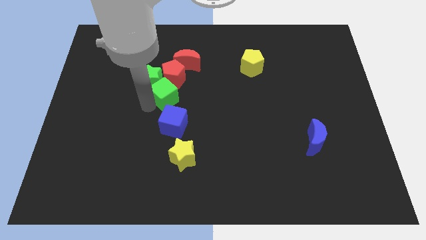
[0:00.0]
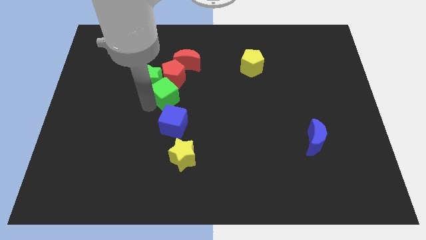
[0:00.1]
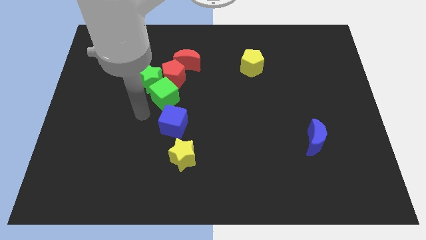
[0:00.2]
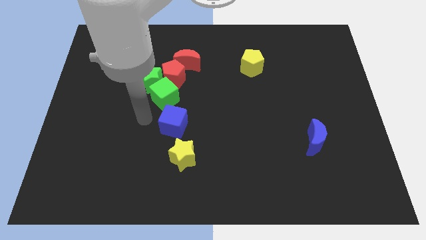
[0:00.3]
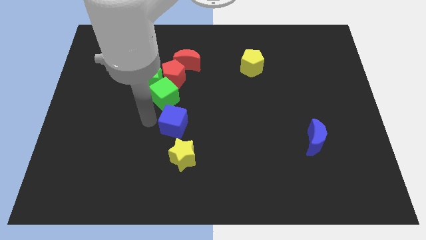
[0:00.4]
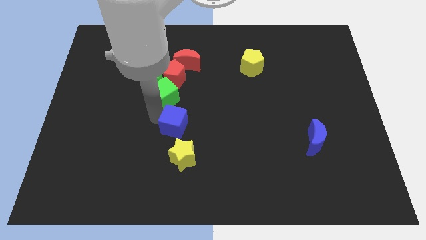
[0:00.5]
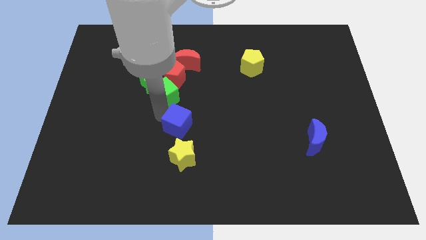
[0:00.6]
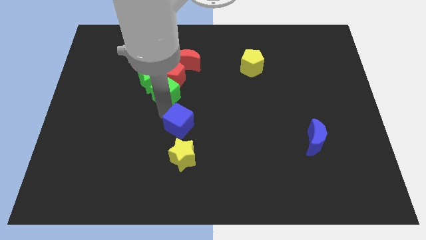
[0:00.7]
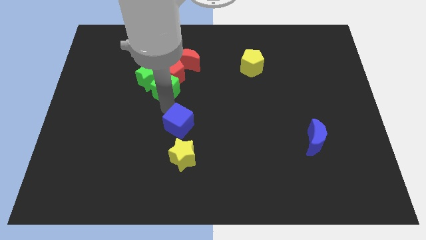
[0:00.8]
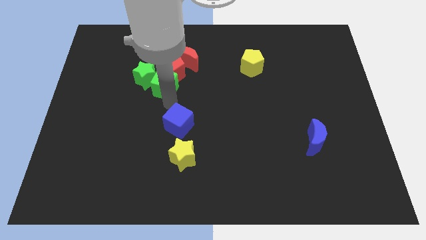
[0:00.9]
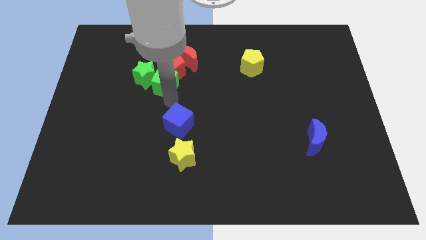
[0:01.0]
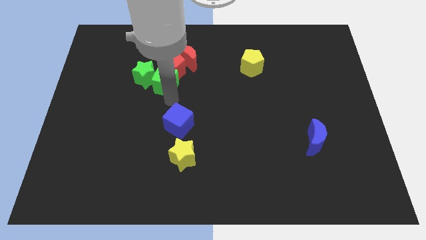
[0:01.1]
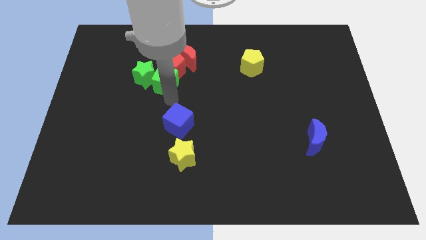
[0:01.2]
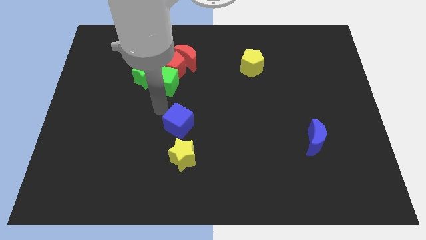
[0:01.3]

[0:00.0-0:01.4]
move the green cube into the red oentagon

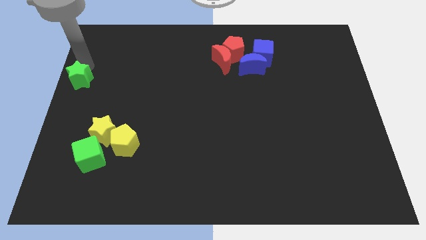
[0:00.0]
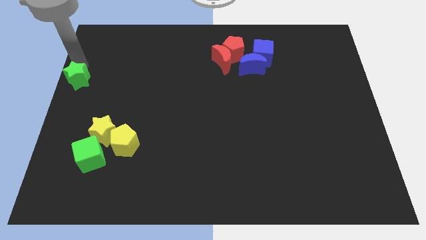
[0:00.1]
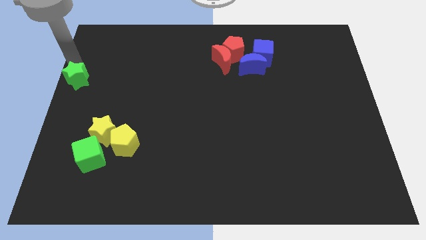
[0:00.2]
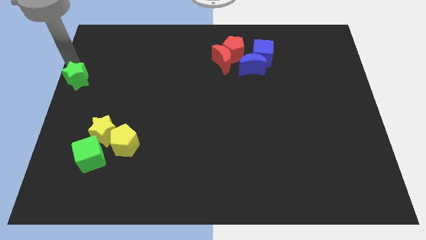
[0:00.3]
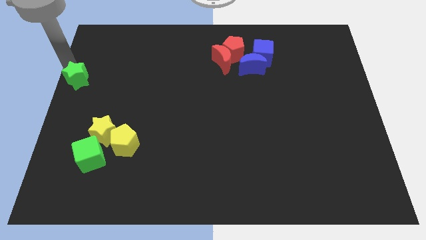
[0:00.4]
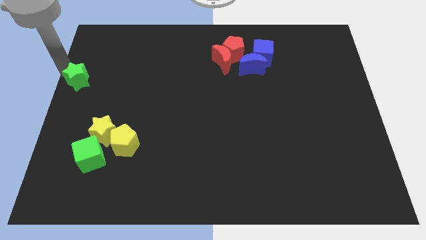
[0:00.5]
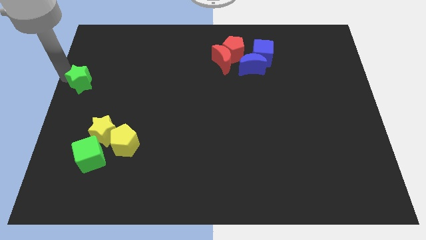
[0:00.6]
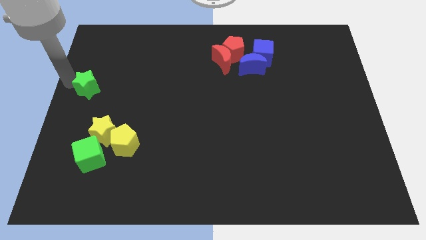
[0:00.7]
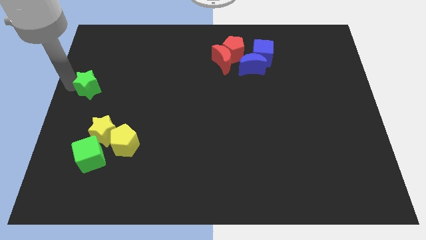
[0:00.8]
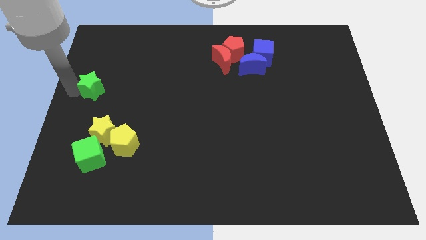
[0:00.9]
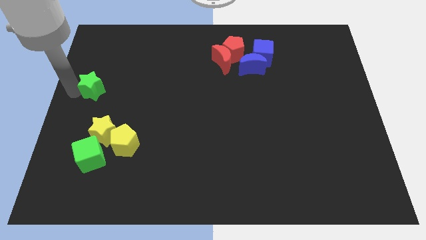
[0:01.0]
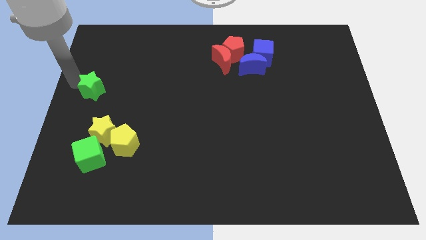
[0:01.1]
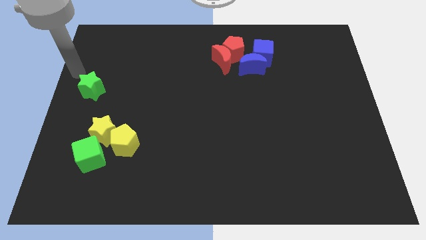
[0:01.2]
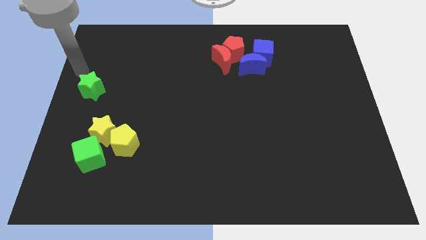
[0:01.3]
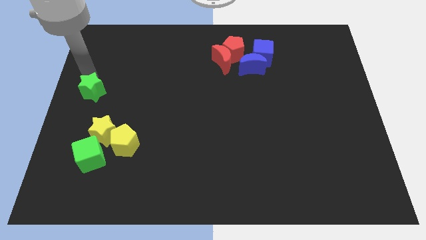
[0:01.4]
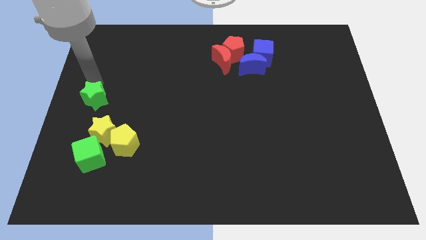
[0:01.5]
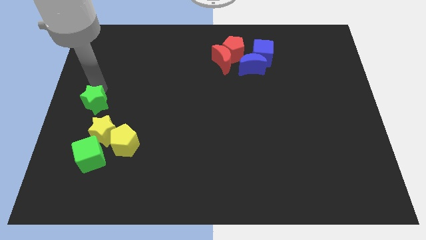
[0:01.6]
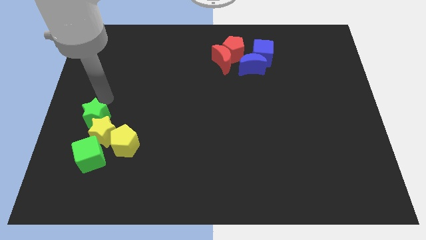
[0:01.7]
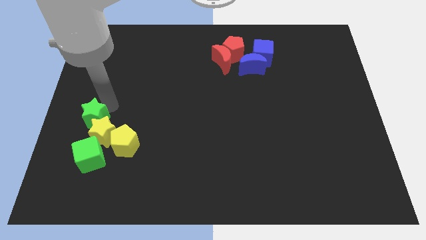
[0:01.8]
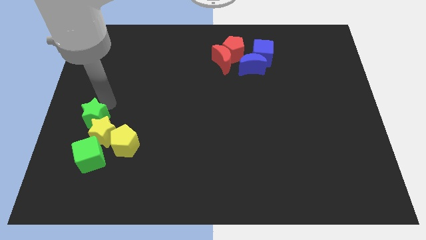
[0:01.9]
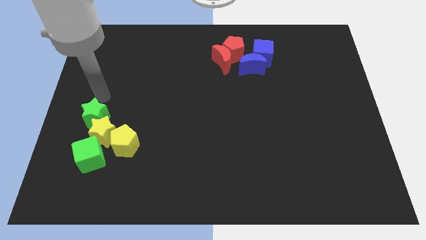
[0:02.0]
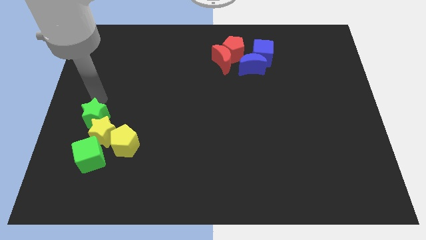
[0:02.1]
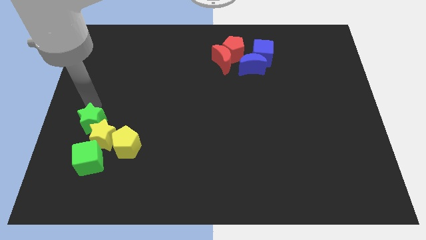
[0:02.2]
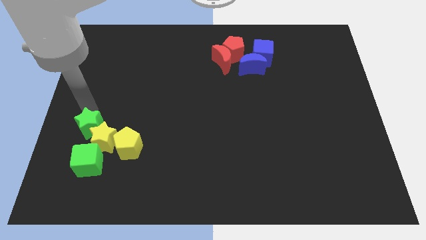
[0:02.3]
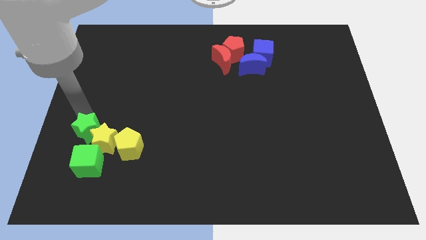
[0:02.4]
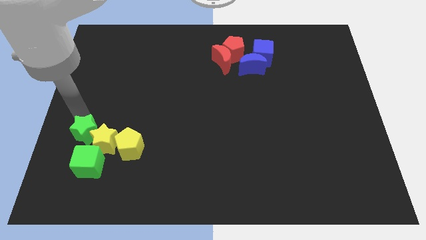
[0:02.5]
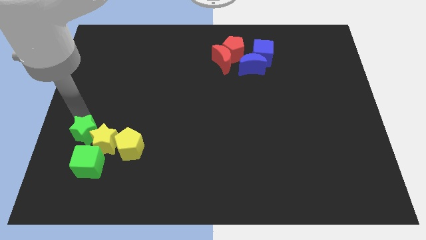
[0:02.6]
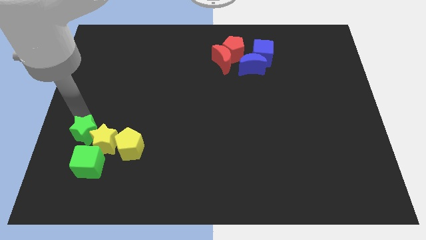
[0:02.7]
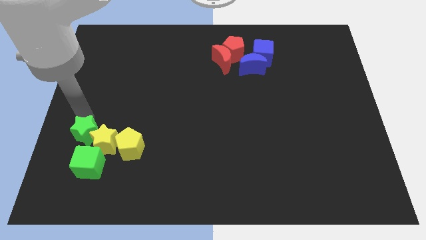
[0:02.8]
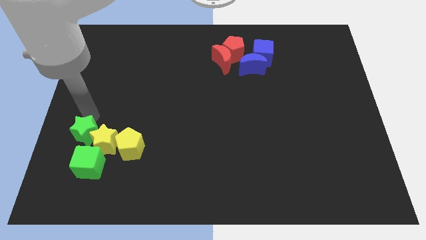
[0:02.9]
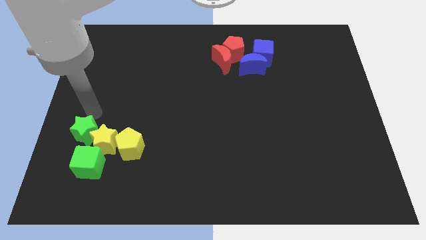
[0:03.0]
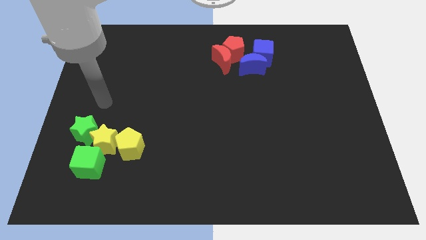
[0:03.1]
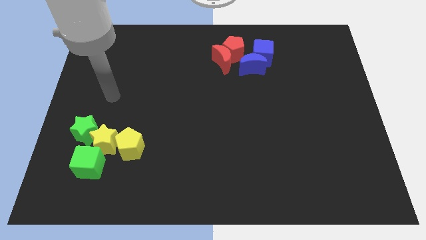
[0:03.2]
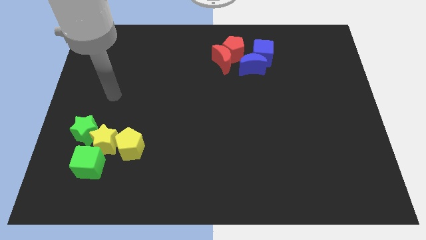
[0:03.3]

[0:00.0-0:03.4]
move the green star into the yellow star from the left

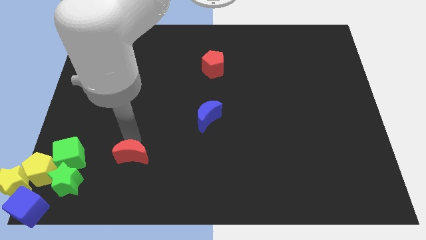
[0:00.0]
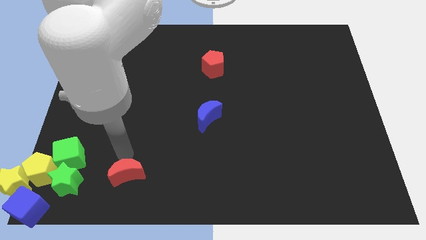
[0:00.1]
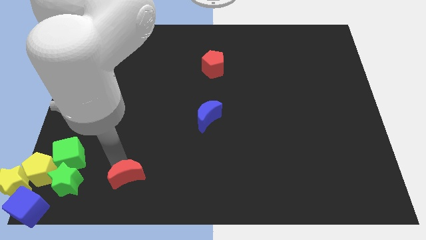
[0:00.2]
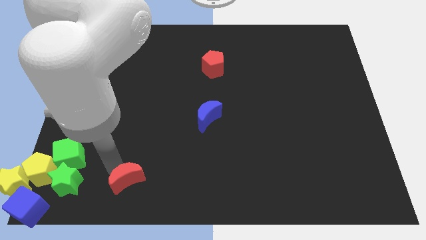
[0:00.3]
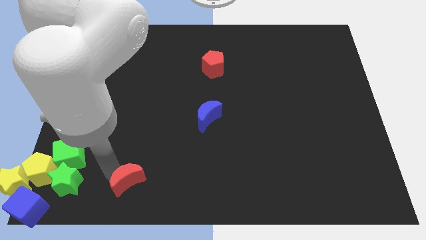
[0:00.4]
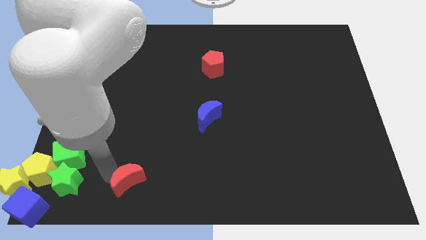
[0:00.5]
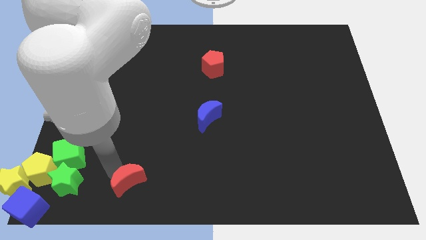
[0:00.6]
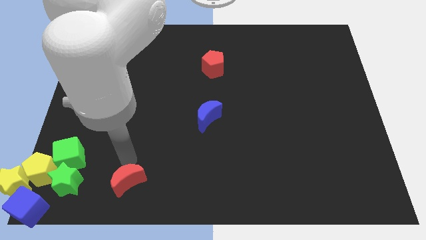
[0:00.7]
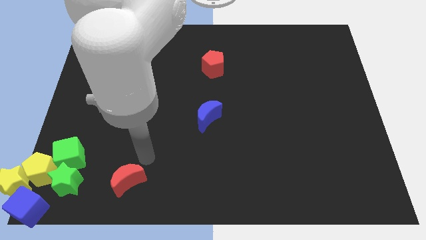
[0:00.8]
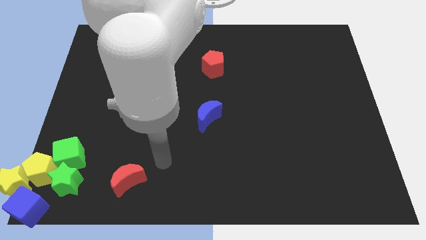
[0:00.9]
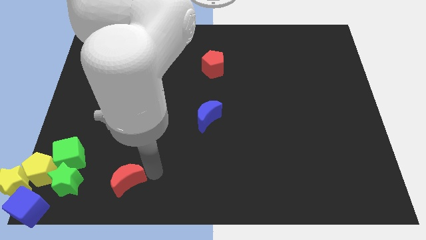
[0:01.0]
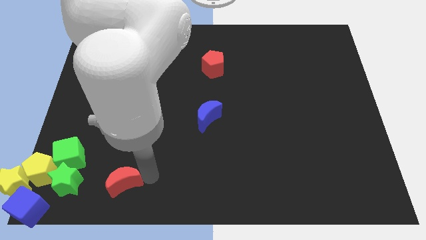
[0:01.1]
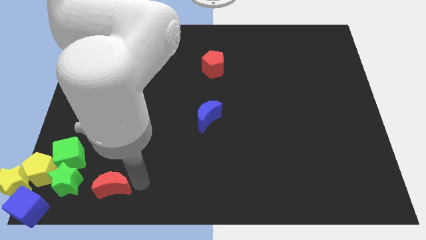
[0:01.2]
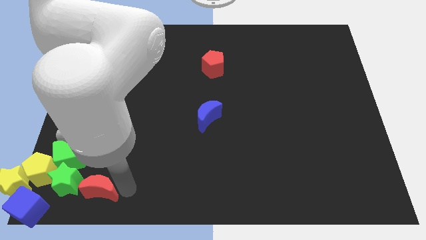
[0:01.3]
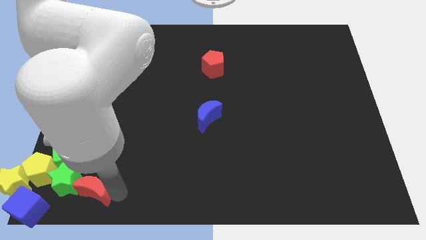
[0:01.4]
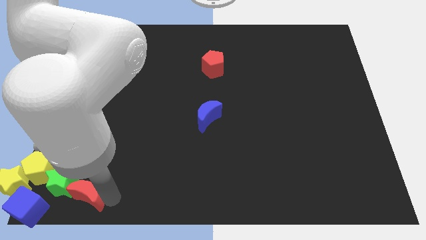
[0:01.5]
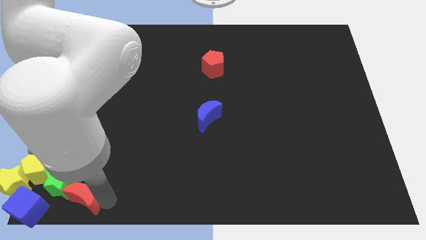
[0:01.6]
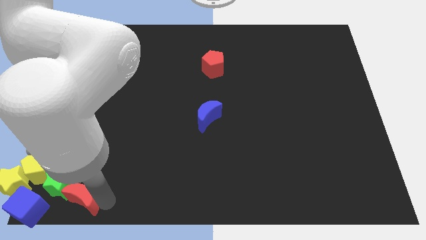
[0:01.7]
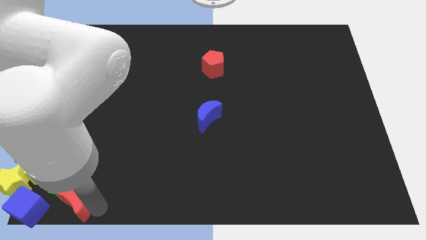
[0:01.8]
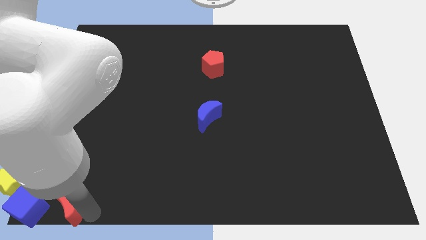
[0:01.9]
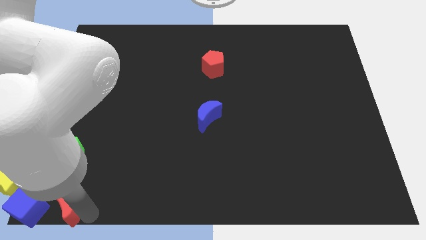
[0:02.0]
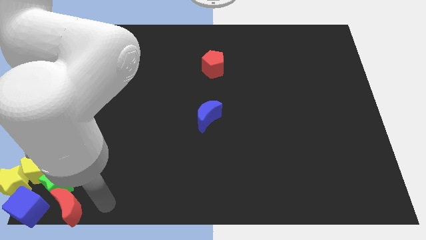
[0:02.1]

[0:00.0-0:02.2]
place red crescent below green star

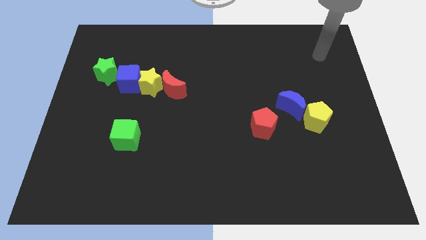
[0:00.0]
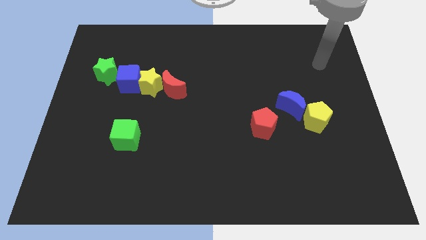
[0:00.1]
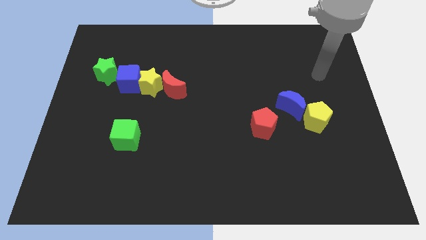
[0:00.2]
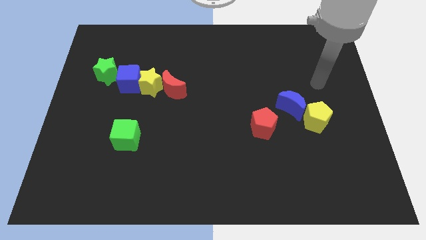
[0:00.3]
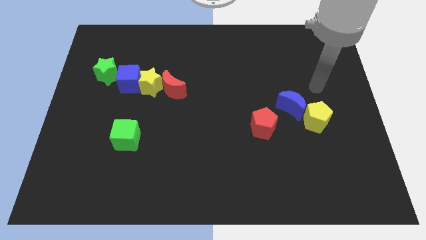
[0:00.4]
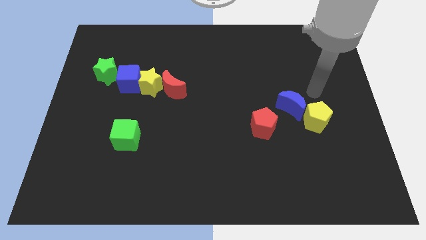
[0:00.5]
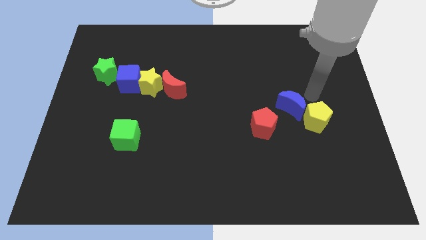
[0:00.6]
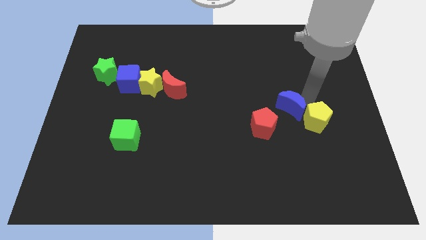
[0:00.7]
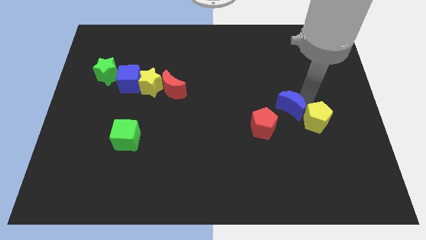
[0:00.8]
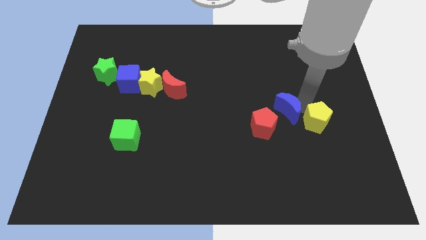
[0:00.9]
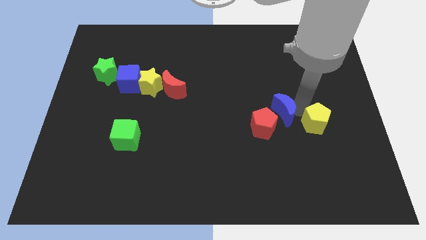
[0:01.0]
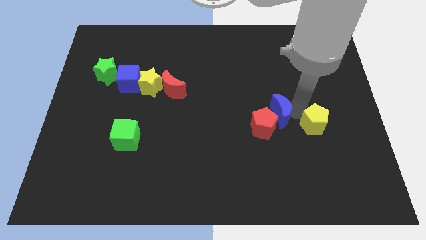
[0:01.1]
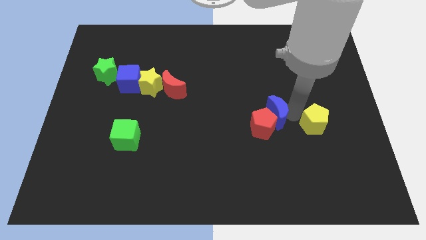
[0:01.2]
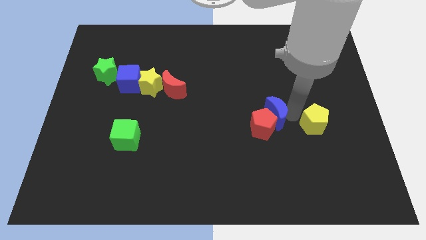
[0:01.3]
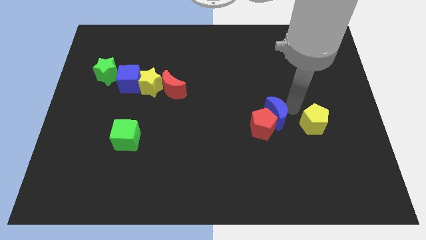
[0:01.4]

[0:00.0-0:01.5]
move the blue moon into the red pentagon

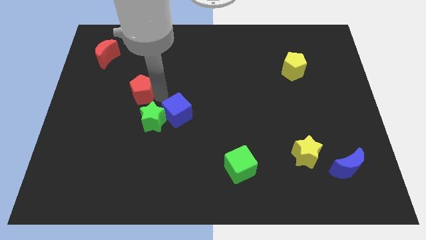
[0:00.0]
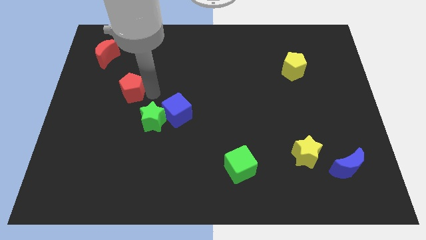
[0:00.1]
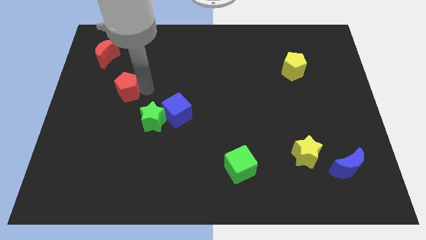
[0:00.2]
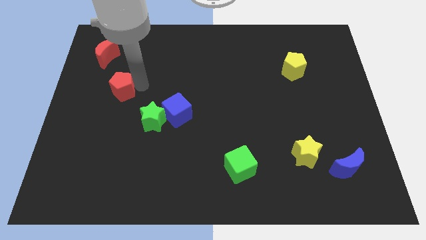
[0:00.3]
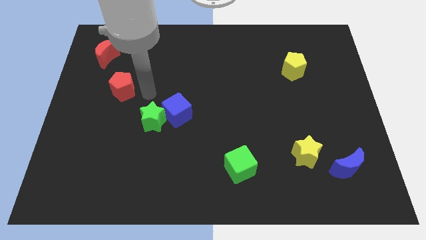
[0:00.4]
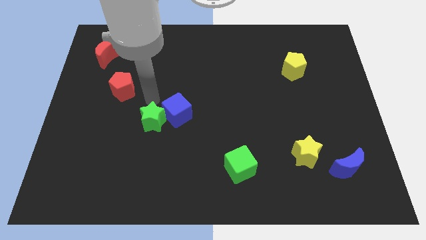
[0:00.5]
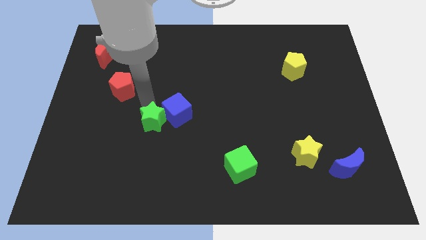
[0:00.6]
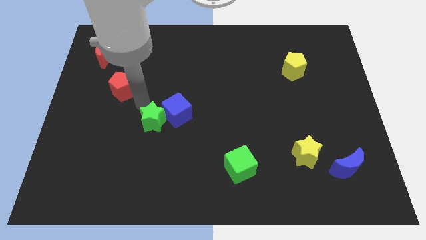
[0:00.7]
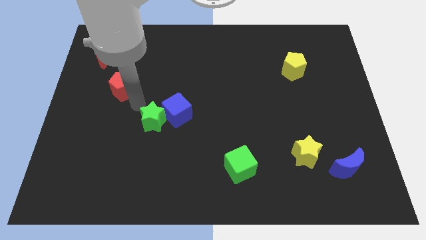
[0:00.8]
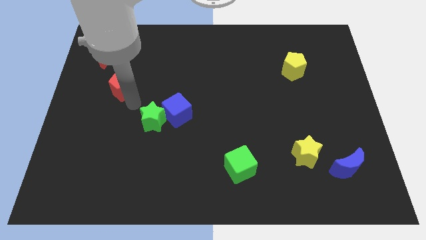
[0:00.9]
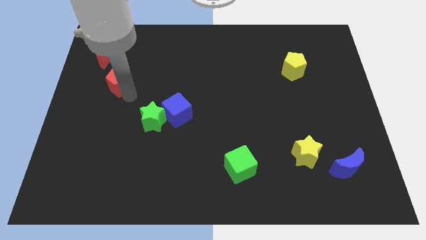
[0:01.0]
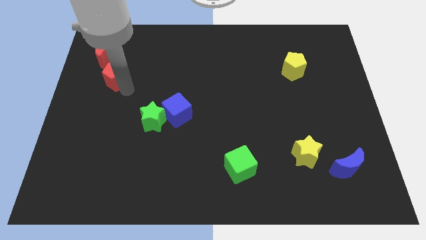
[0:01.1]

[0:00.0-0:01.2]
move the red pentagon towards red crescent
